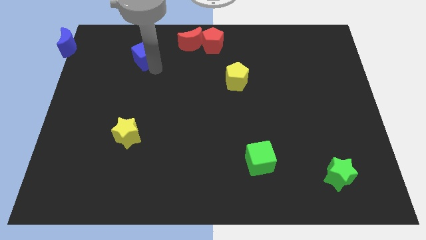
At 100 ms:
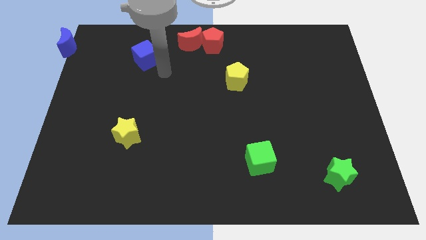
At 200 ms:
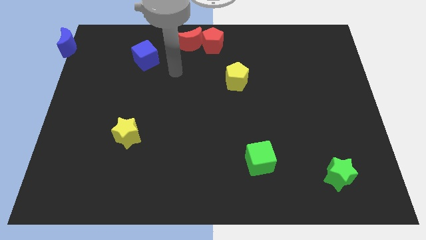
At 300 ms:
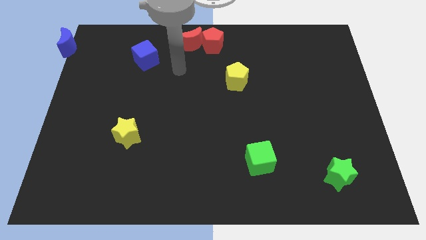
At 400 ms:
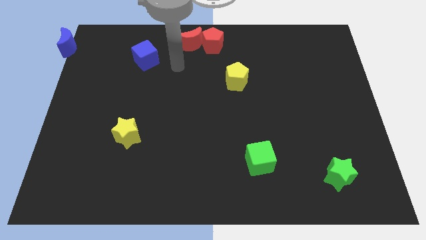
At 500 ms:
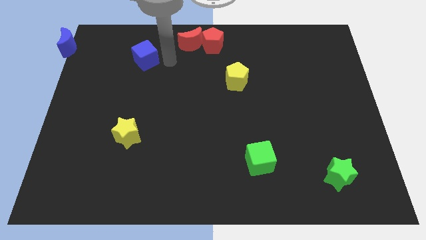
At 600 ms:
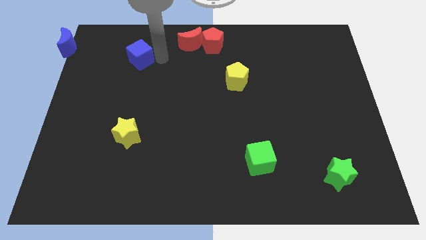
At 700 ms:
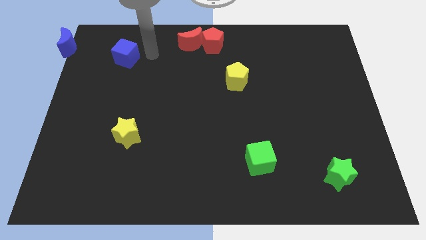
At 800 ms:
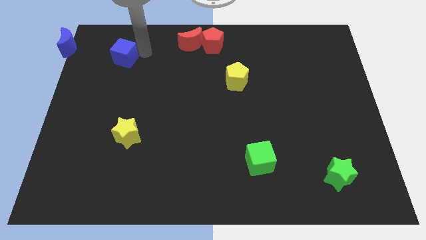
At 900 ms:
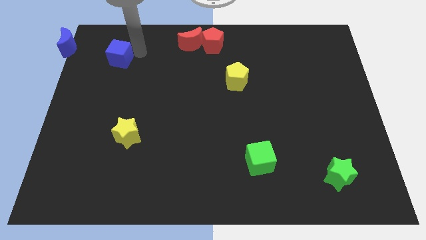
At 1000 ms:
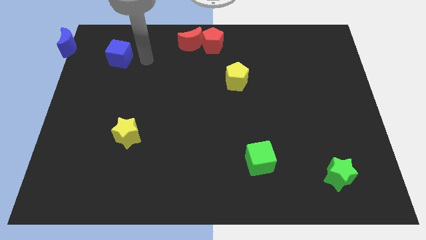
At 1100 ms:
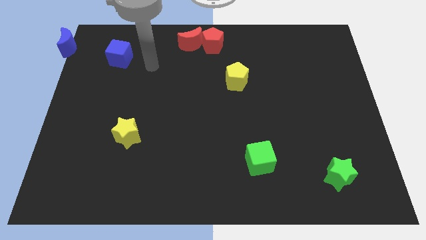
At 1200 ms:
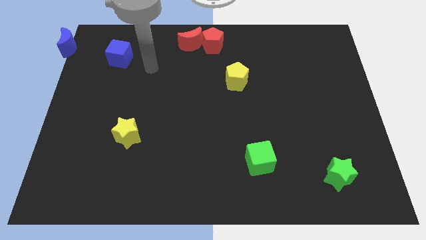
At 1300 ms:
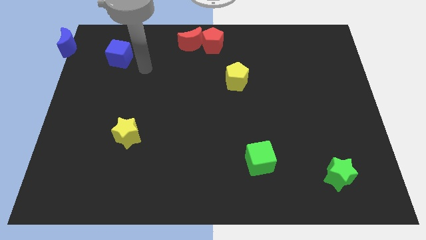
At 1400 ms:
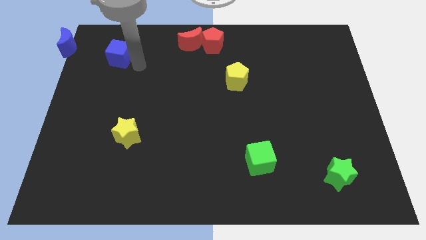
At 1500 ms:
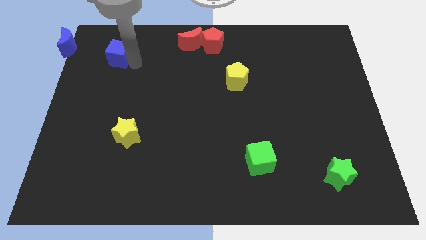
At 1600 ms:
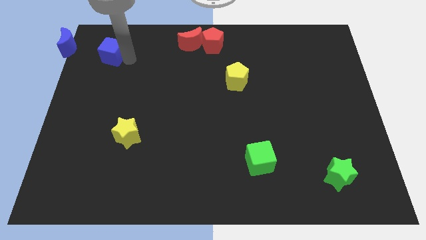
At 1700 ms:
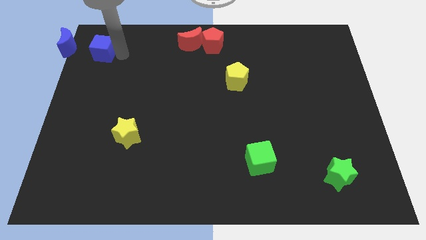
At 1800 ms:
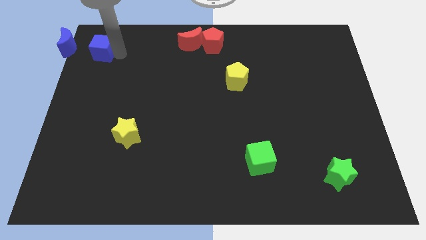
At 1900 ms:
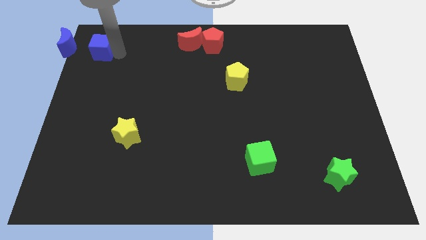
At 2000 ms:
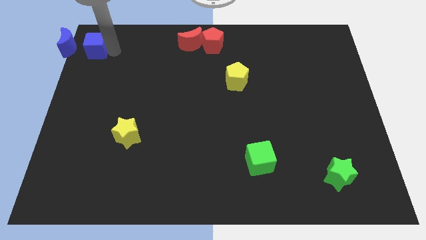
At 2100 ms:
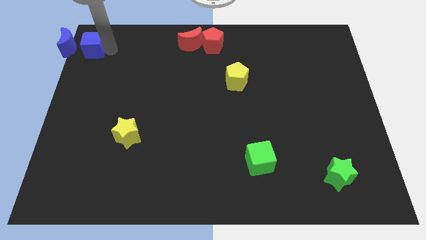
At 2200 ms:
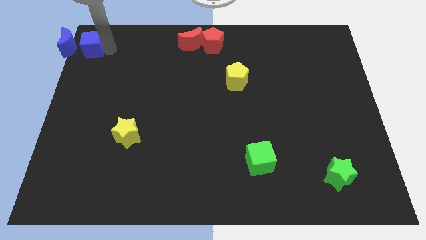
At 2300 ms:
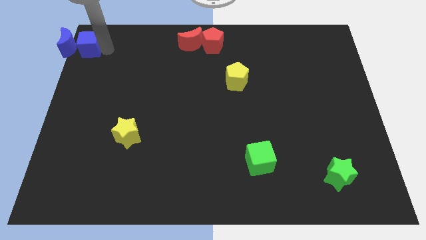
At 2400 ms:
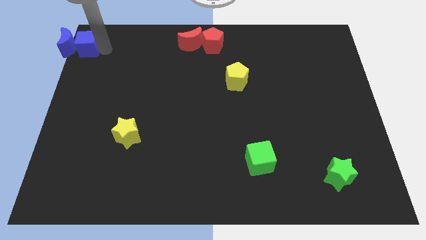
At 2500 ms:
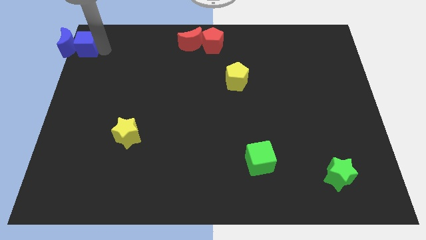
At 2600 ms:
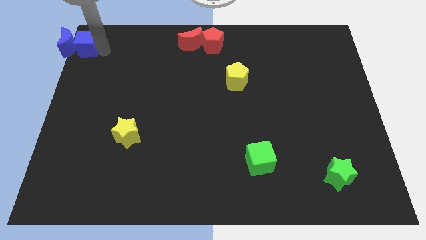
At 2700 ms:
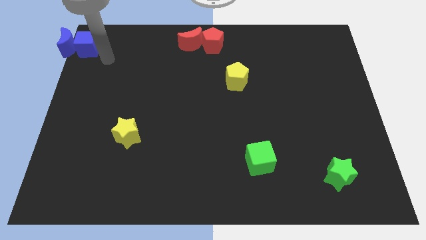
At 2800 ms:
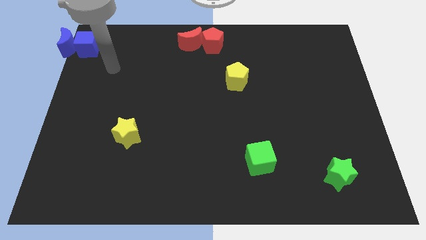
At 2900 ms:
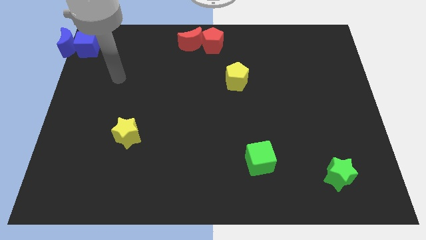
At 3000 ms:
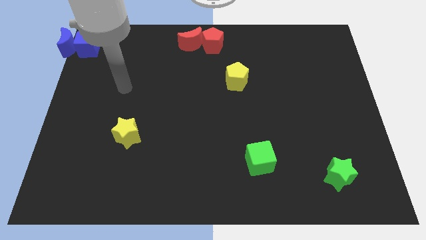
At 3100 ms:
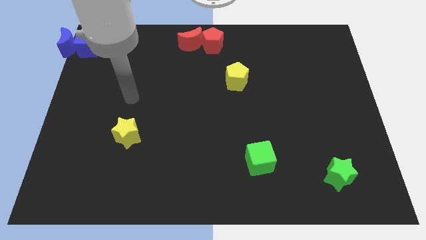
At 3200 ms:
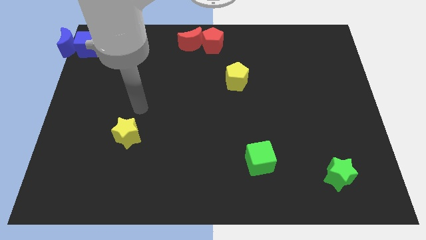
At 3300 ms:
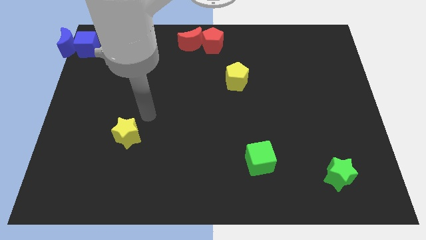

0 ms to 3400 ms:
slide the blue cube to the right side of the blue moon

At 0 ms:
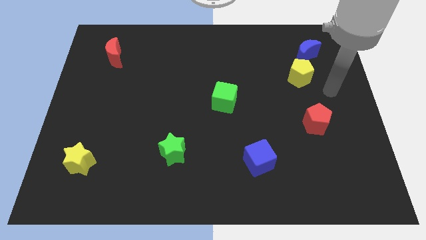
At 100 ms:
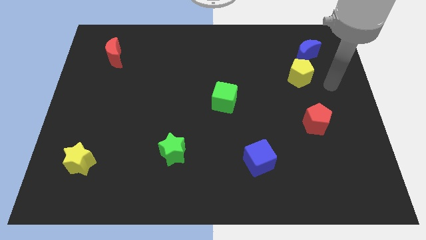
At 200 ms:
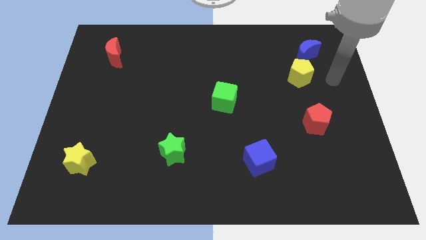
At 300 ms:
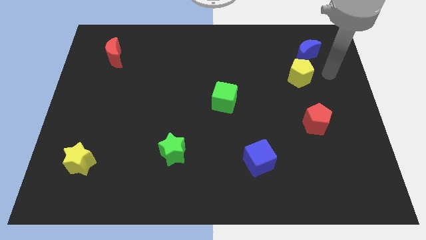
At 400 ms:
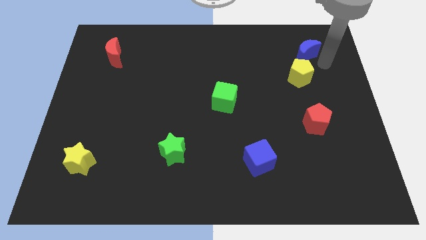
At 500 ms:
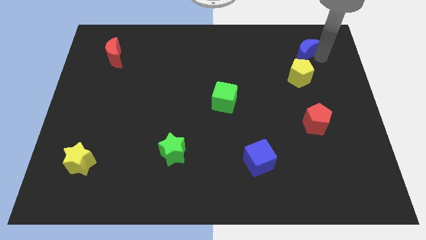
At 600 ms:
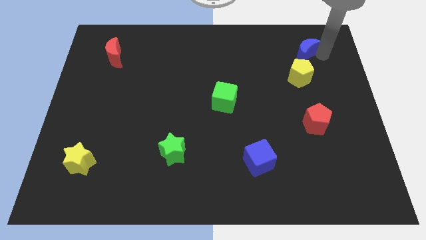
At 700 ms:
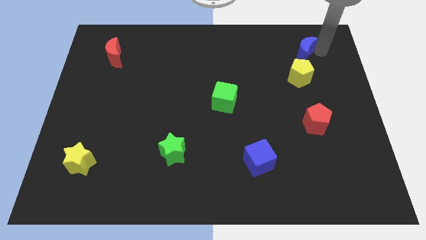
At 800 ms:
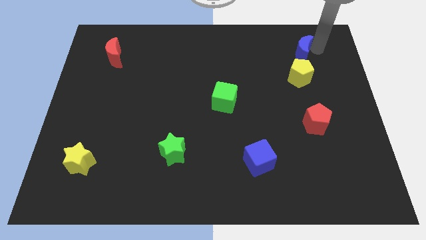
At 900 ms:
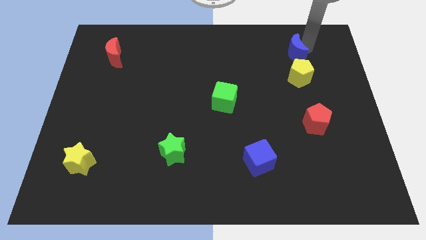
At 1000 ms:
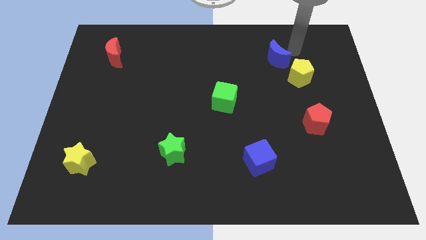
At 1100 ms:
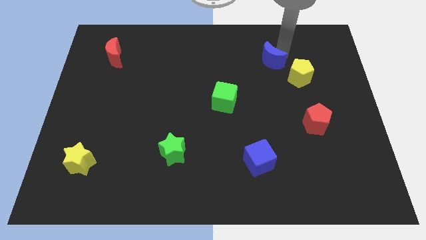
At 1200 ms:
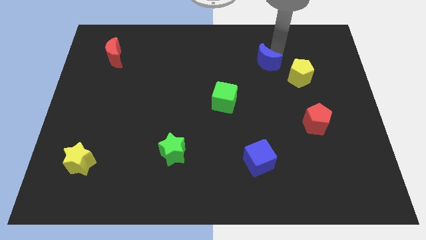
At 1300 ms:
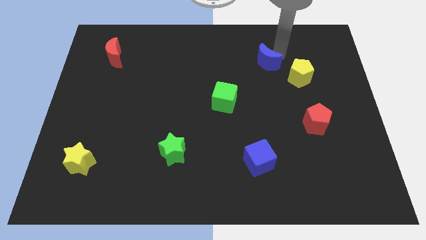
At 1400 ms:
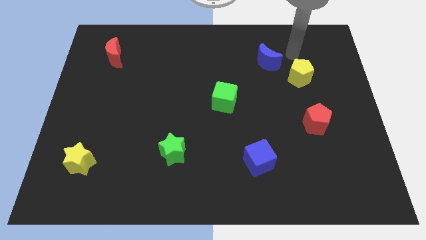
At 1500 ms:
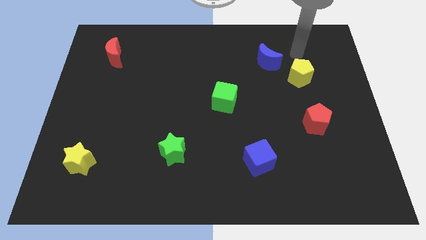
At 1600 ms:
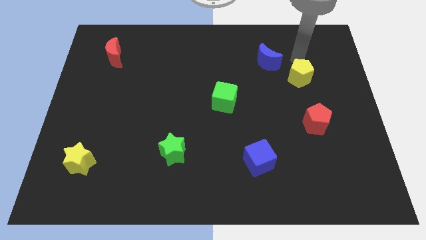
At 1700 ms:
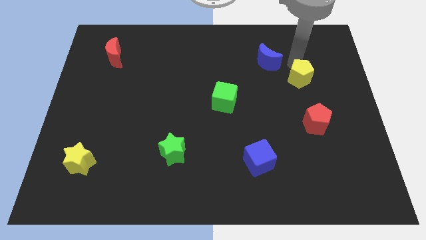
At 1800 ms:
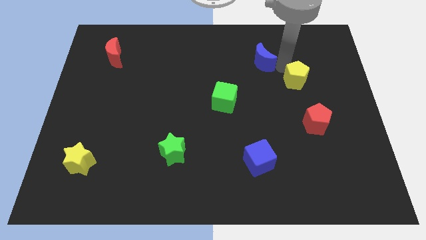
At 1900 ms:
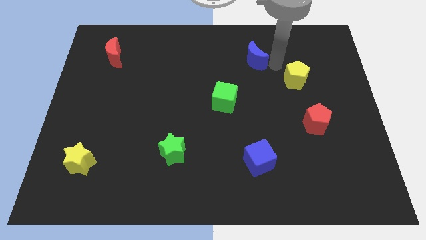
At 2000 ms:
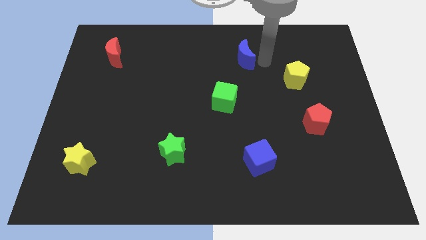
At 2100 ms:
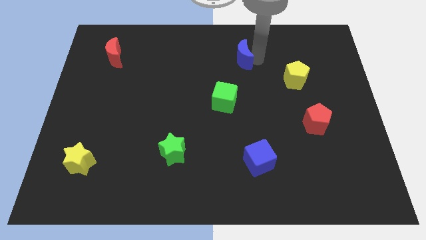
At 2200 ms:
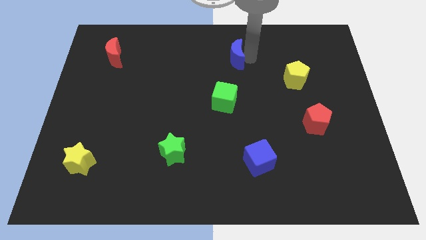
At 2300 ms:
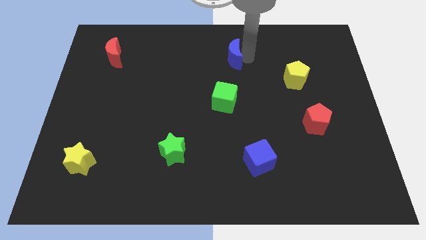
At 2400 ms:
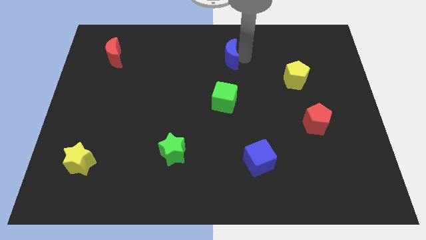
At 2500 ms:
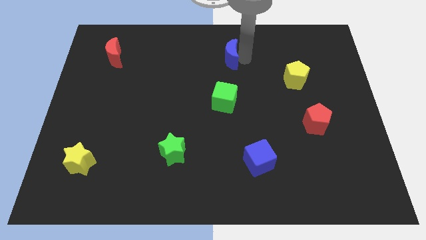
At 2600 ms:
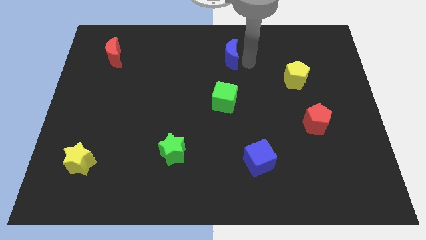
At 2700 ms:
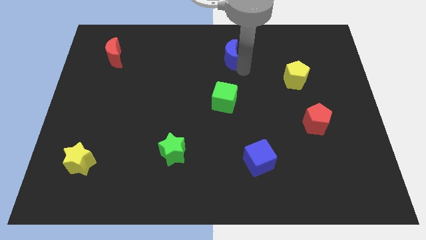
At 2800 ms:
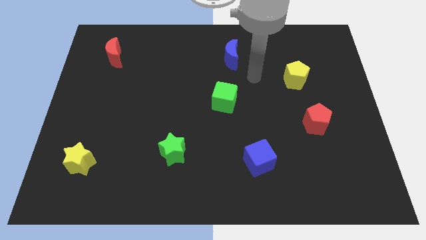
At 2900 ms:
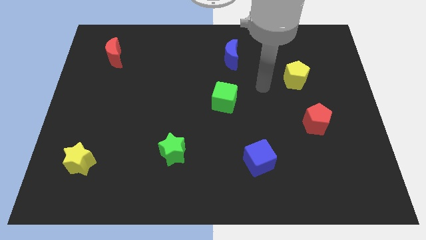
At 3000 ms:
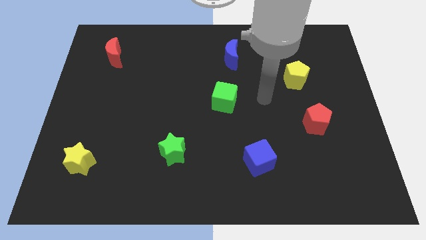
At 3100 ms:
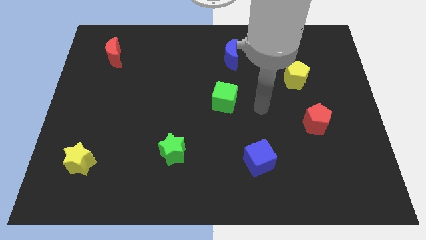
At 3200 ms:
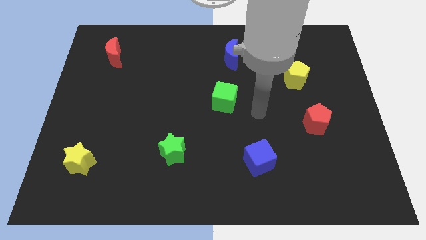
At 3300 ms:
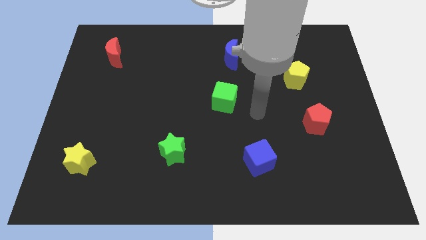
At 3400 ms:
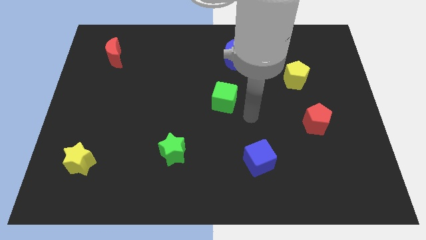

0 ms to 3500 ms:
push the blue moon towards the top center of the board

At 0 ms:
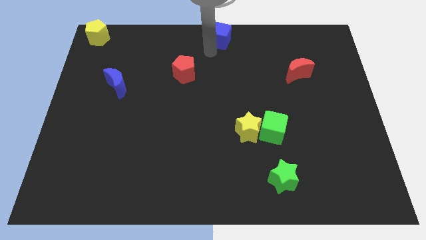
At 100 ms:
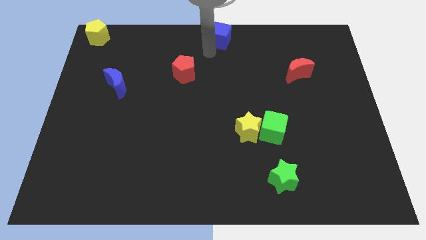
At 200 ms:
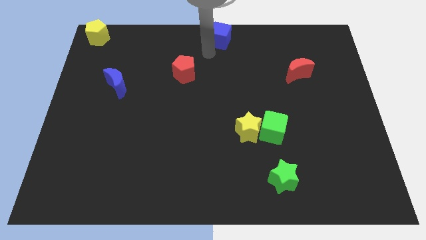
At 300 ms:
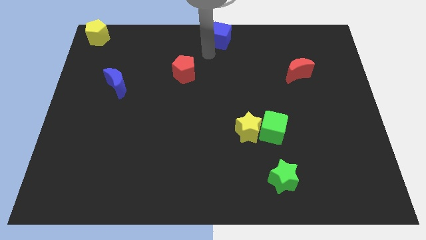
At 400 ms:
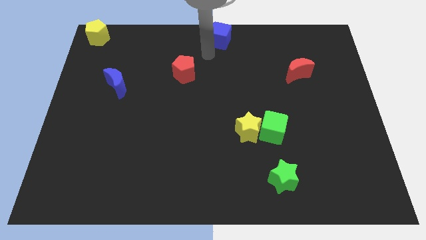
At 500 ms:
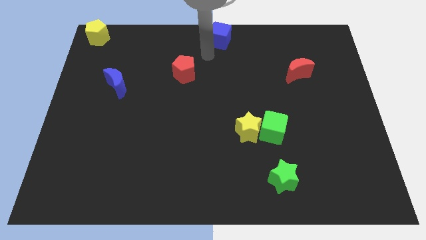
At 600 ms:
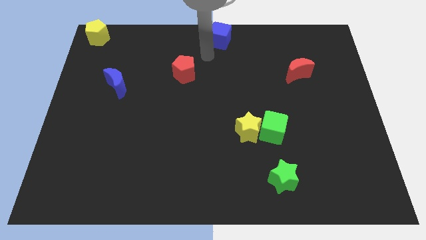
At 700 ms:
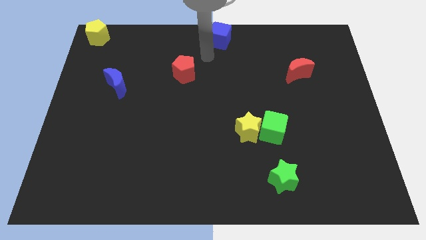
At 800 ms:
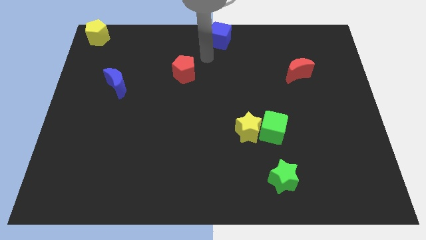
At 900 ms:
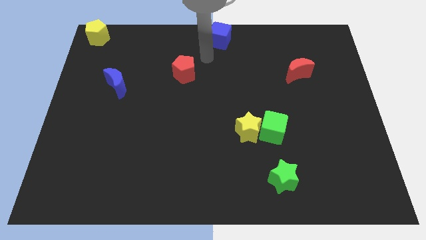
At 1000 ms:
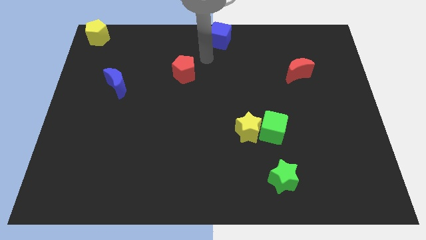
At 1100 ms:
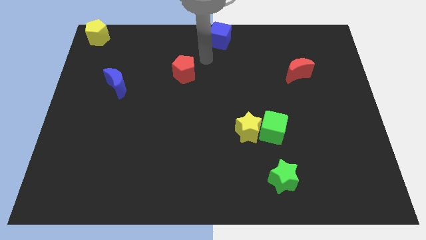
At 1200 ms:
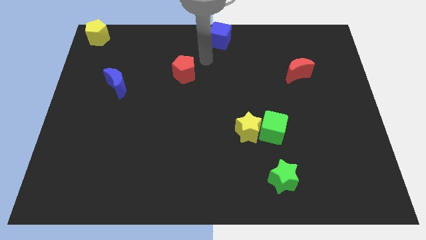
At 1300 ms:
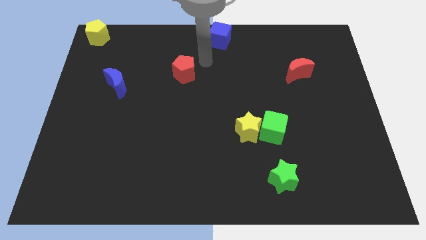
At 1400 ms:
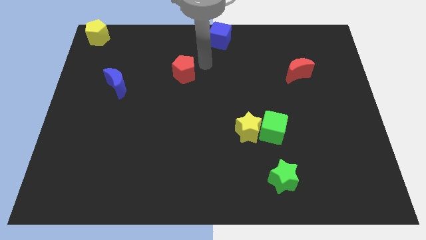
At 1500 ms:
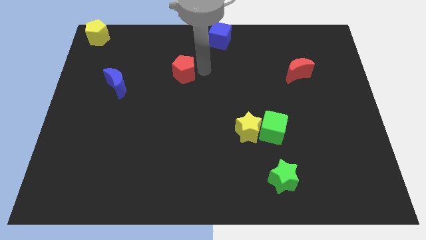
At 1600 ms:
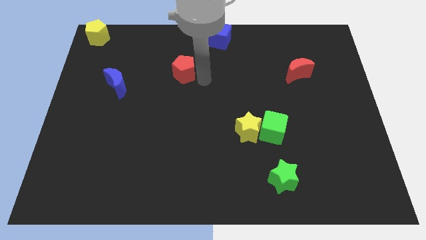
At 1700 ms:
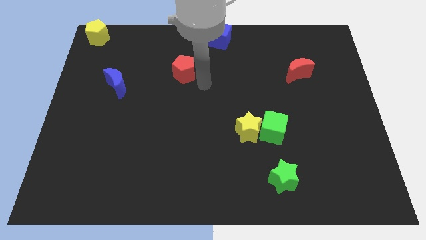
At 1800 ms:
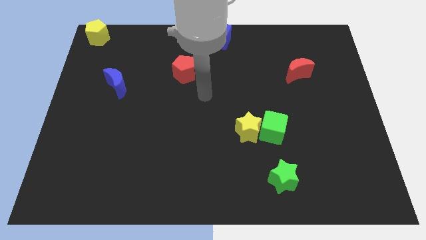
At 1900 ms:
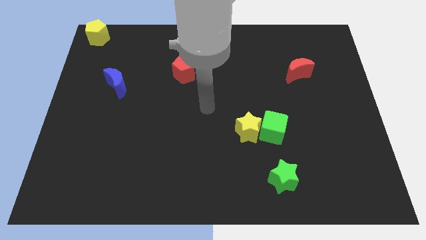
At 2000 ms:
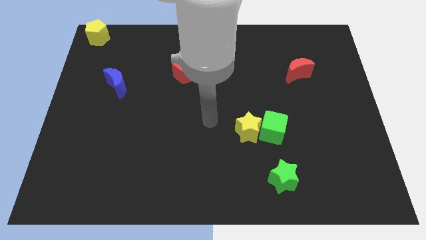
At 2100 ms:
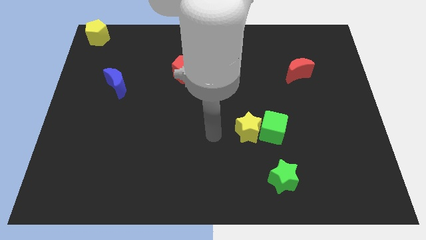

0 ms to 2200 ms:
move your arm near yellow pentagon
